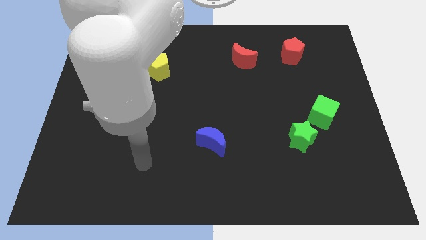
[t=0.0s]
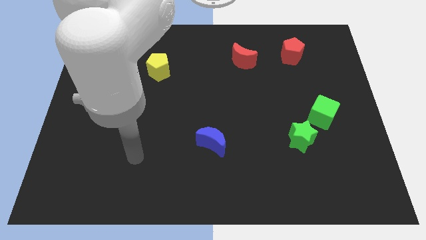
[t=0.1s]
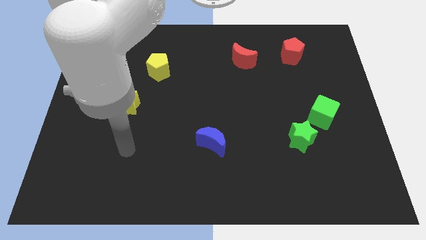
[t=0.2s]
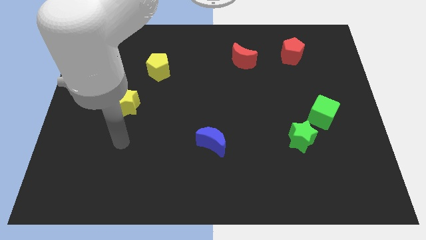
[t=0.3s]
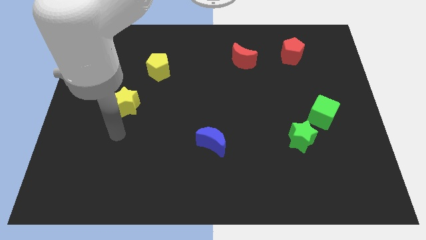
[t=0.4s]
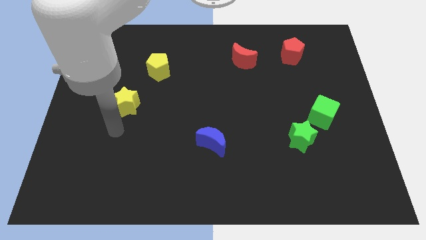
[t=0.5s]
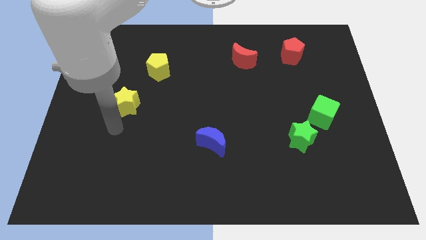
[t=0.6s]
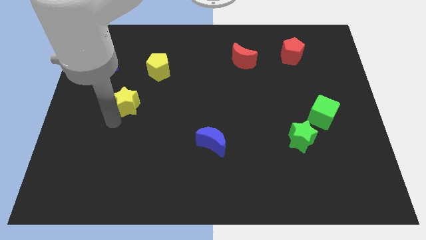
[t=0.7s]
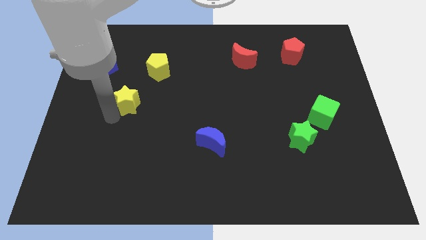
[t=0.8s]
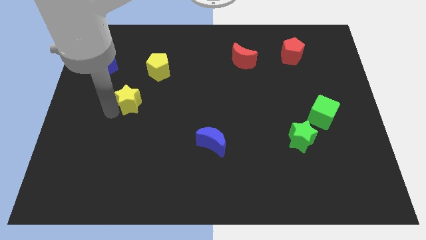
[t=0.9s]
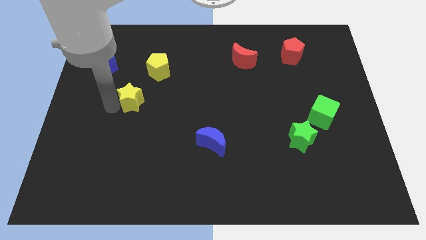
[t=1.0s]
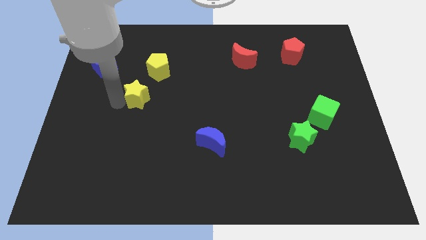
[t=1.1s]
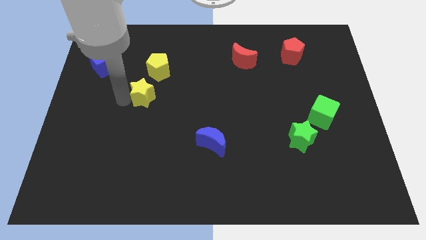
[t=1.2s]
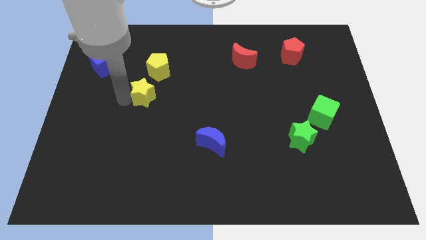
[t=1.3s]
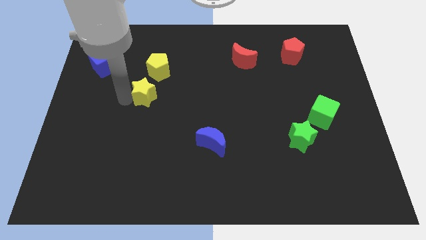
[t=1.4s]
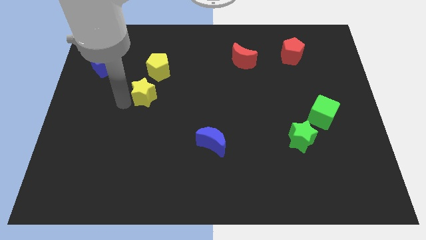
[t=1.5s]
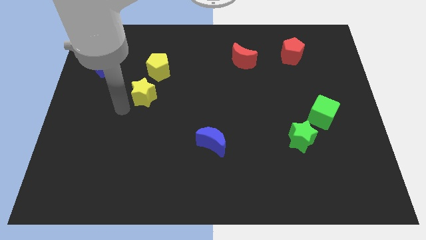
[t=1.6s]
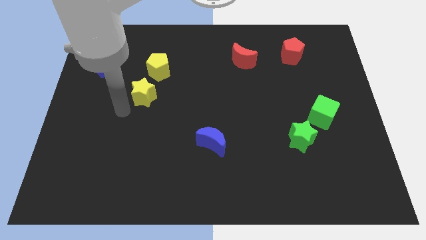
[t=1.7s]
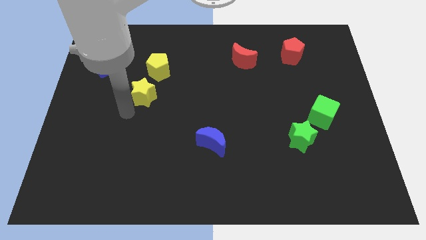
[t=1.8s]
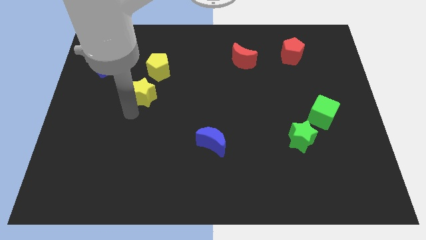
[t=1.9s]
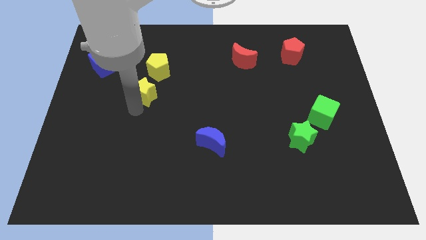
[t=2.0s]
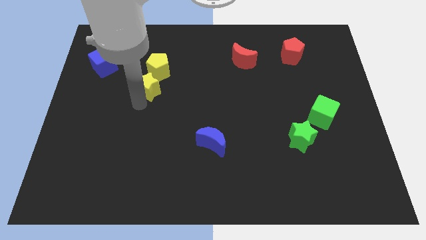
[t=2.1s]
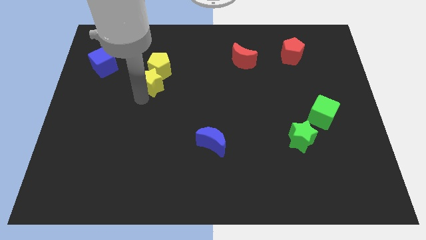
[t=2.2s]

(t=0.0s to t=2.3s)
attach the yellow star to the yellow pentagon

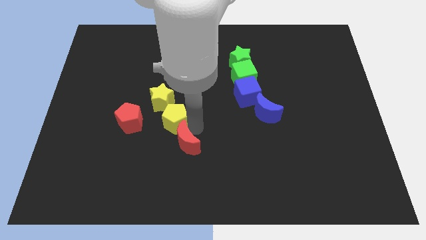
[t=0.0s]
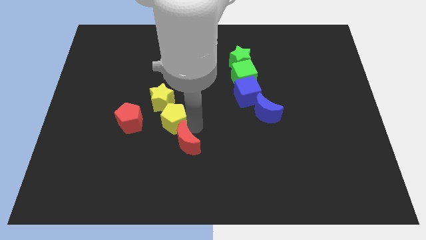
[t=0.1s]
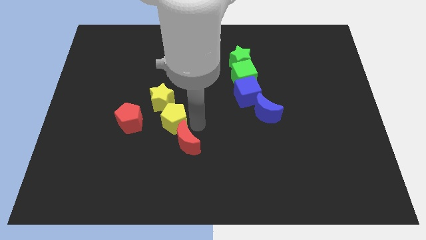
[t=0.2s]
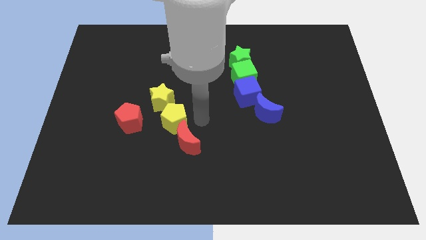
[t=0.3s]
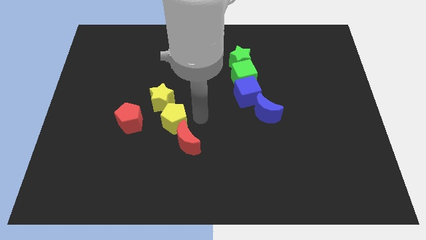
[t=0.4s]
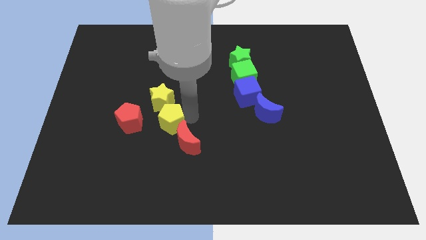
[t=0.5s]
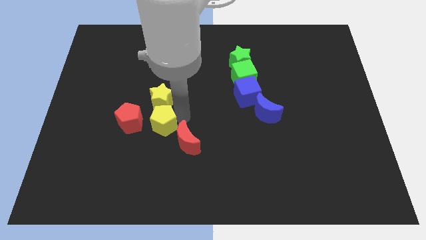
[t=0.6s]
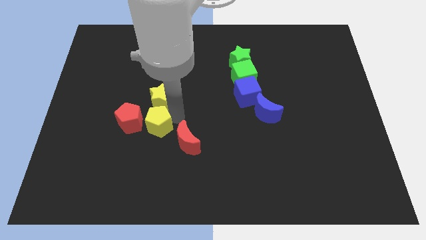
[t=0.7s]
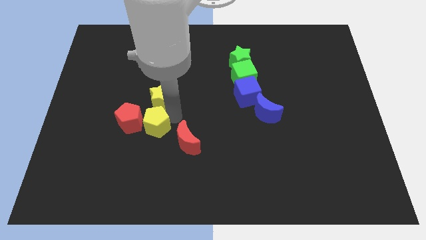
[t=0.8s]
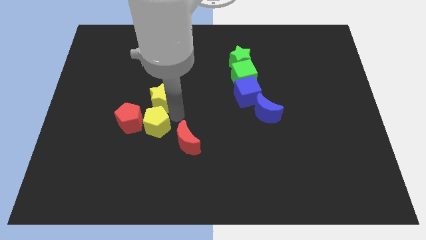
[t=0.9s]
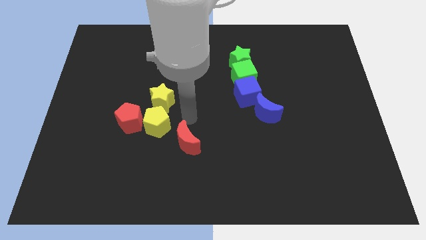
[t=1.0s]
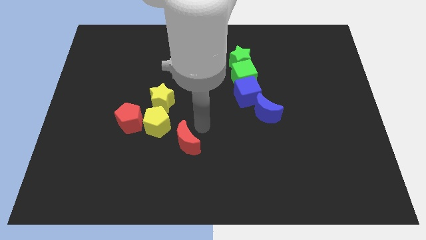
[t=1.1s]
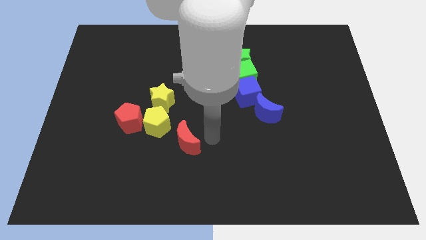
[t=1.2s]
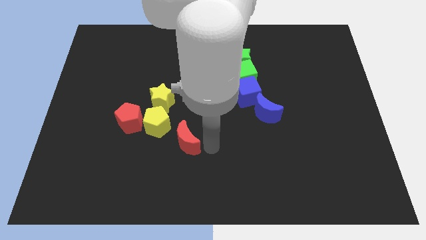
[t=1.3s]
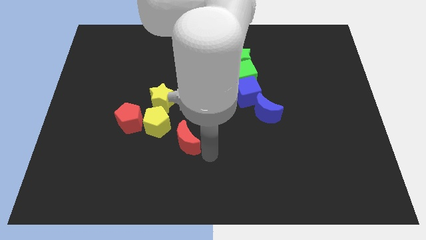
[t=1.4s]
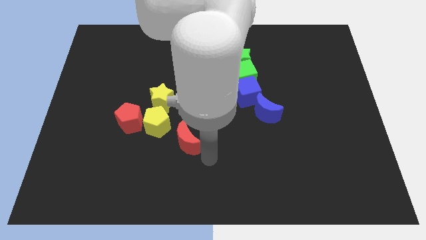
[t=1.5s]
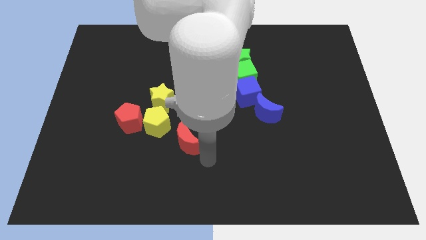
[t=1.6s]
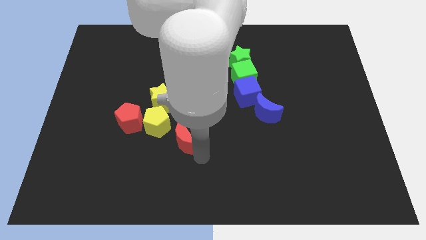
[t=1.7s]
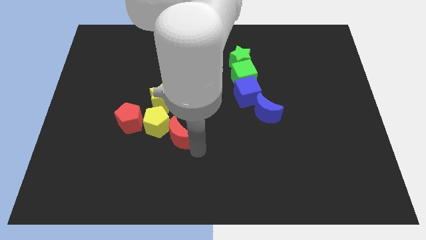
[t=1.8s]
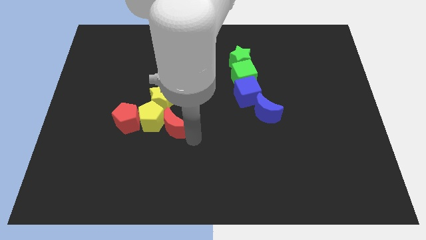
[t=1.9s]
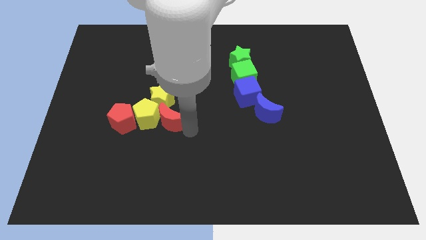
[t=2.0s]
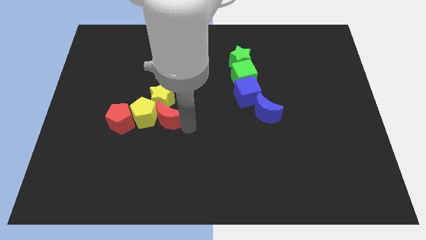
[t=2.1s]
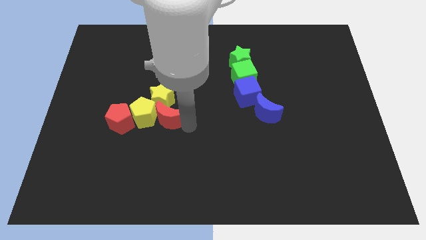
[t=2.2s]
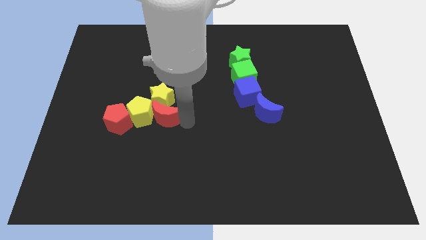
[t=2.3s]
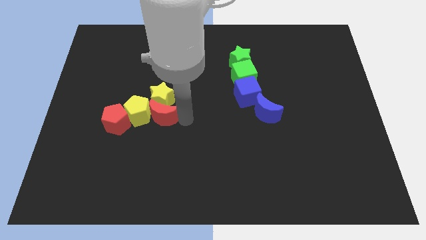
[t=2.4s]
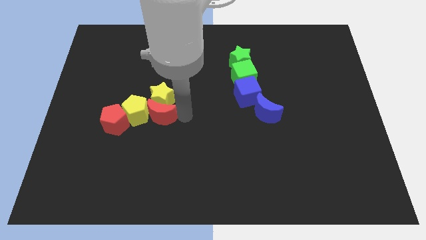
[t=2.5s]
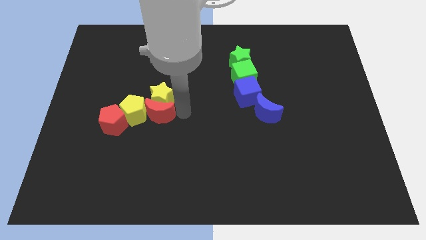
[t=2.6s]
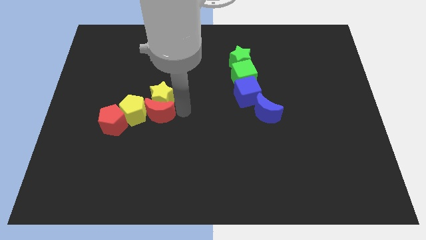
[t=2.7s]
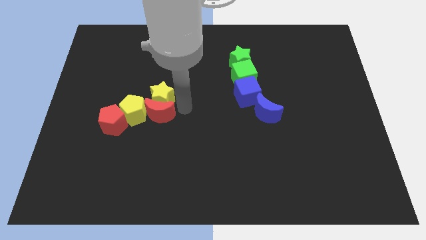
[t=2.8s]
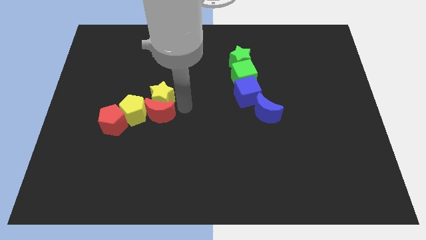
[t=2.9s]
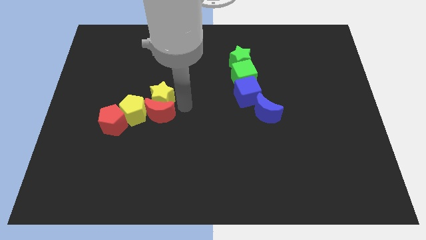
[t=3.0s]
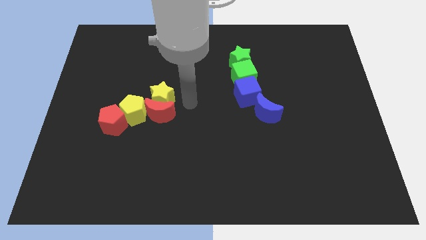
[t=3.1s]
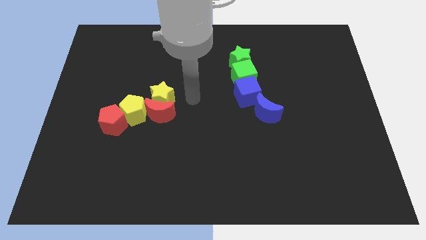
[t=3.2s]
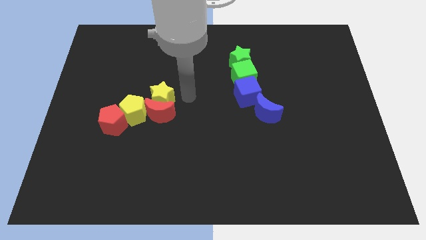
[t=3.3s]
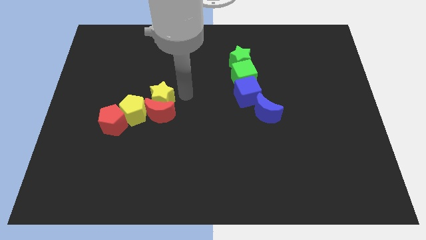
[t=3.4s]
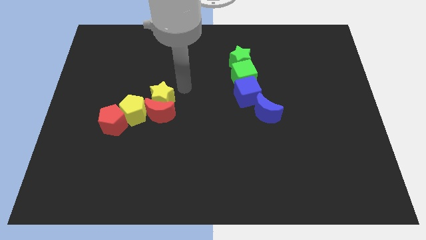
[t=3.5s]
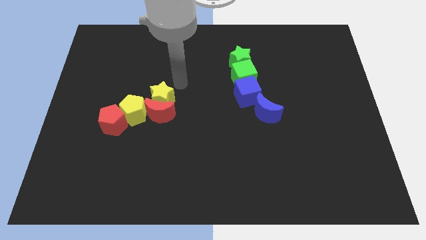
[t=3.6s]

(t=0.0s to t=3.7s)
make a group of red pentagonyellow pentagonred crescent and yellow star

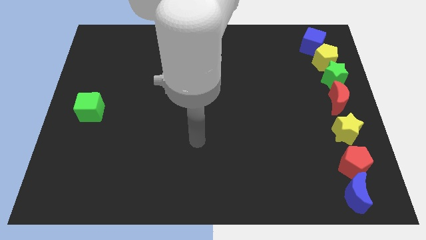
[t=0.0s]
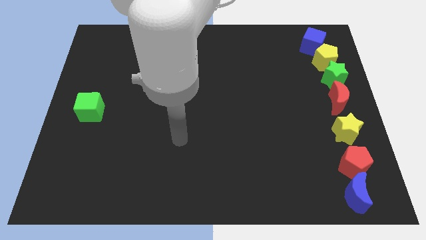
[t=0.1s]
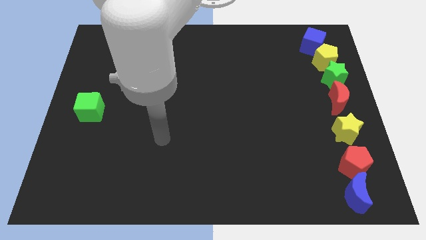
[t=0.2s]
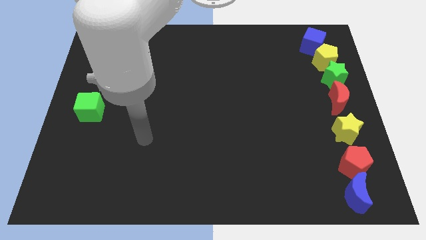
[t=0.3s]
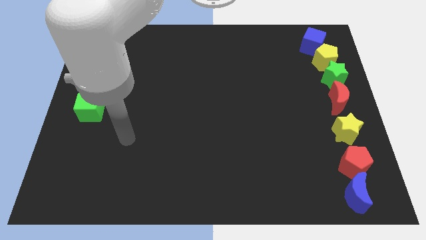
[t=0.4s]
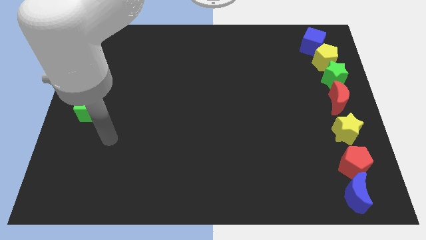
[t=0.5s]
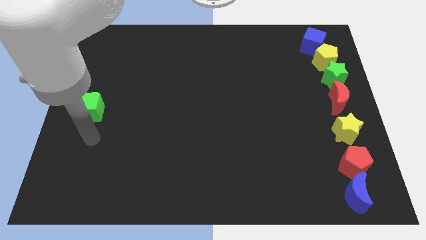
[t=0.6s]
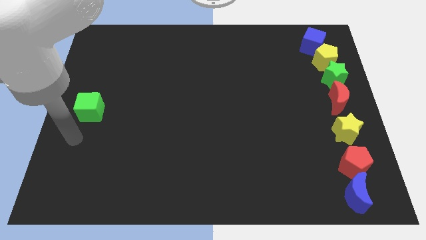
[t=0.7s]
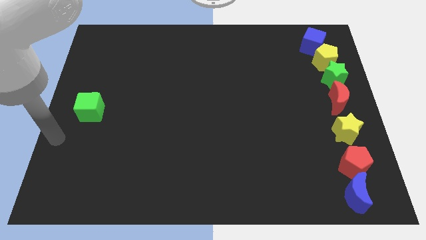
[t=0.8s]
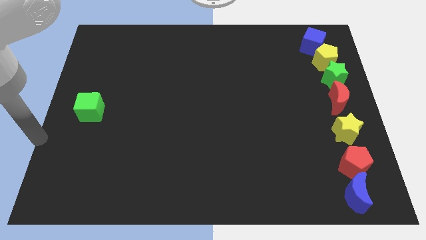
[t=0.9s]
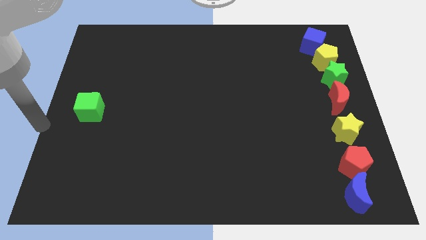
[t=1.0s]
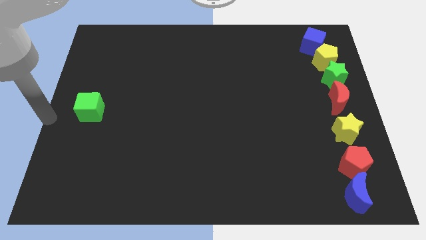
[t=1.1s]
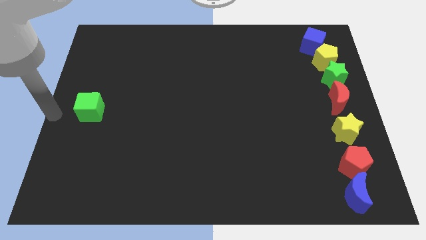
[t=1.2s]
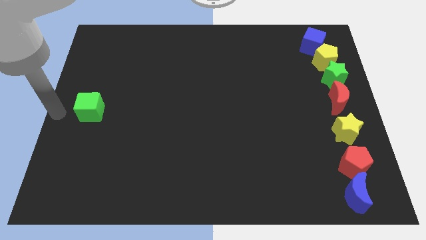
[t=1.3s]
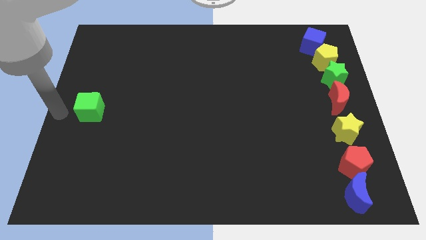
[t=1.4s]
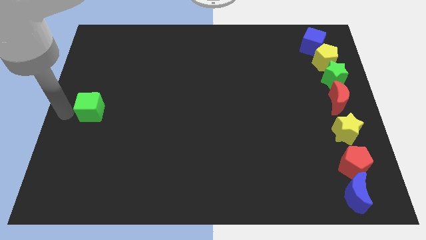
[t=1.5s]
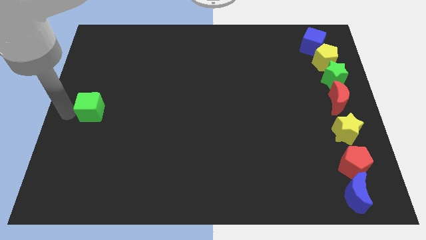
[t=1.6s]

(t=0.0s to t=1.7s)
point your hand at the left side of the green cube

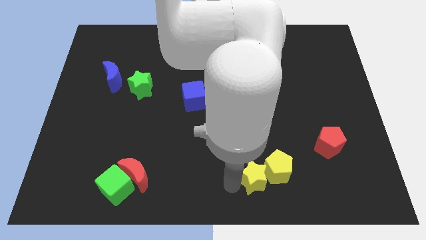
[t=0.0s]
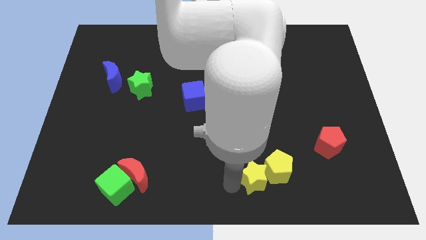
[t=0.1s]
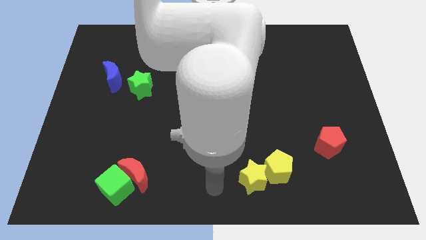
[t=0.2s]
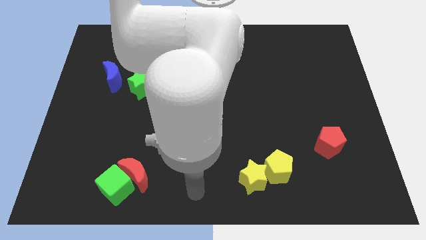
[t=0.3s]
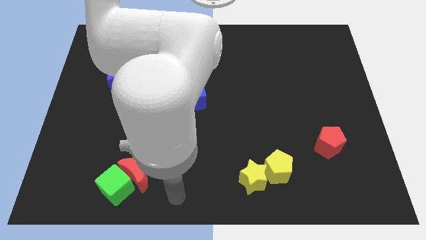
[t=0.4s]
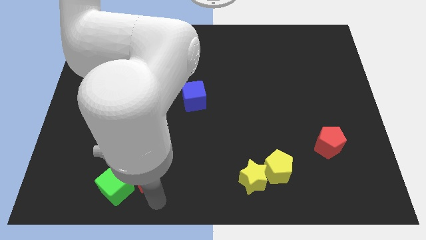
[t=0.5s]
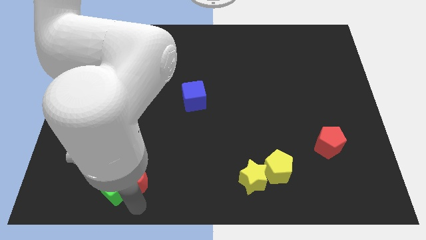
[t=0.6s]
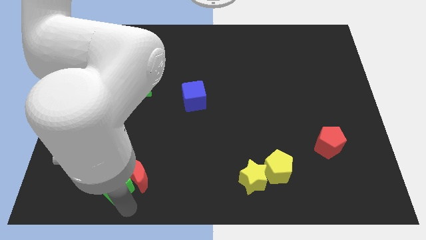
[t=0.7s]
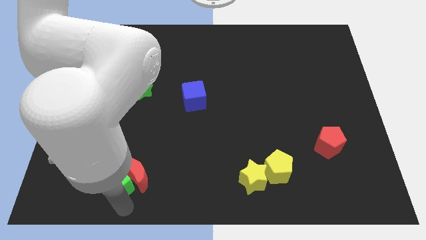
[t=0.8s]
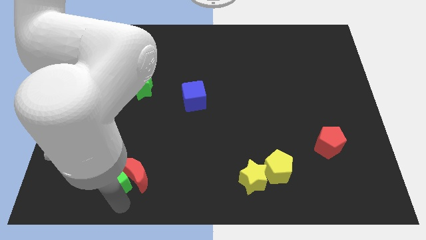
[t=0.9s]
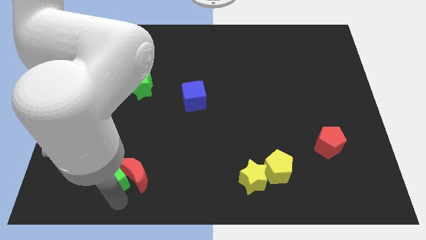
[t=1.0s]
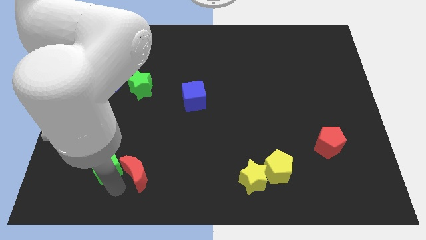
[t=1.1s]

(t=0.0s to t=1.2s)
place the arm near the green cube
